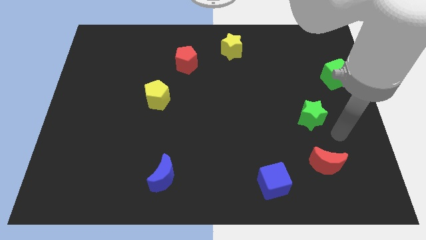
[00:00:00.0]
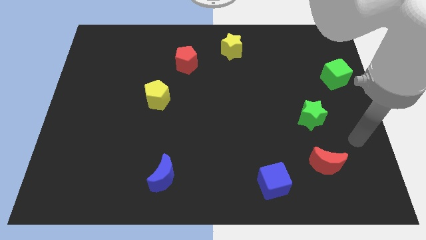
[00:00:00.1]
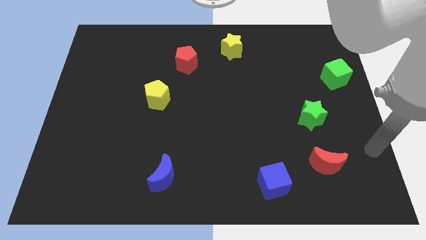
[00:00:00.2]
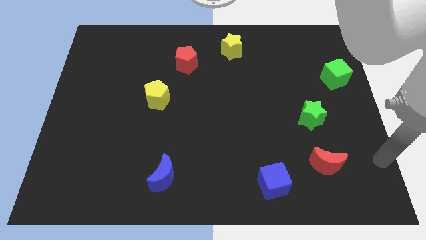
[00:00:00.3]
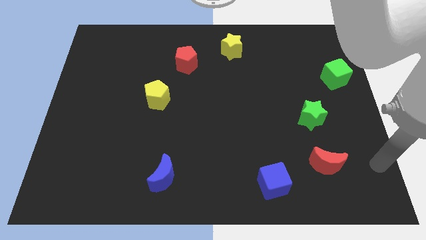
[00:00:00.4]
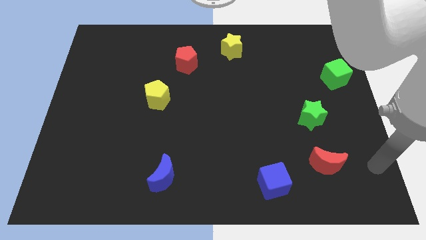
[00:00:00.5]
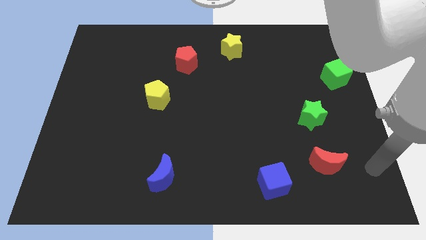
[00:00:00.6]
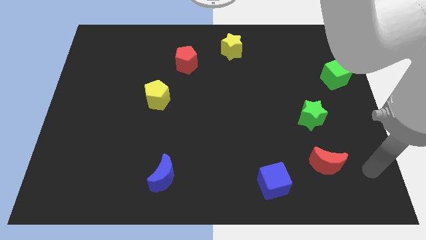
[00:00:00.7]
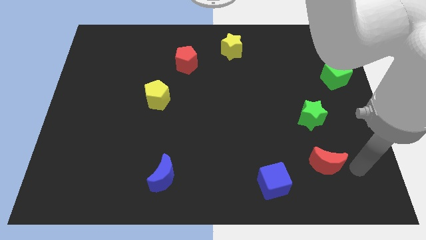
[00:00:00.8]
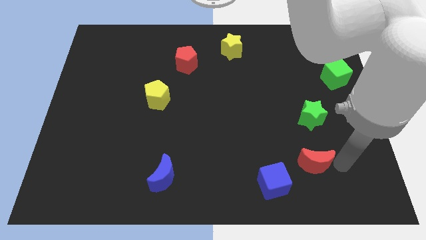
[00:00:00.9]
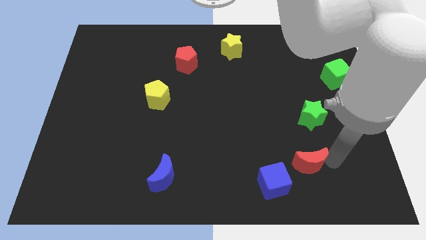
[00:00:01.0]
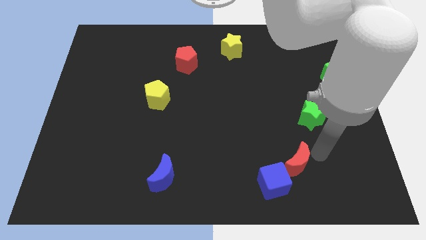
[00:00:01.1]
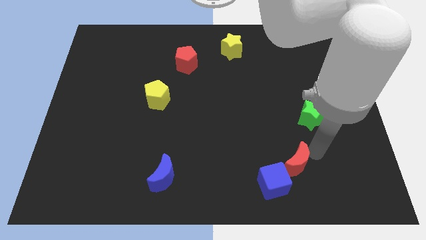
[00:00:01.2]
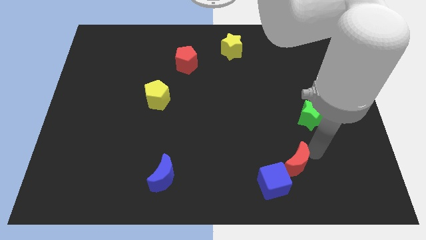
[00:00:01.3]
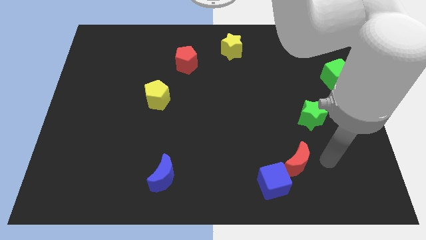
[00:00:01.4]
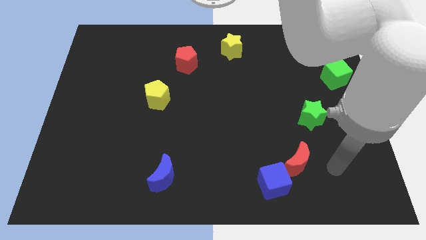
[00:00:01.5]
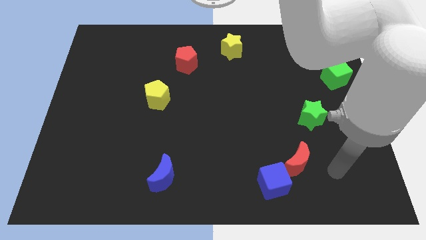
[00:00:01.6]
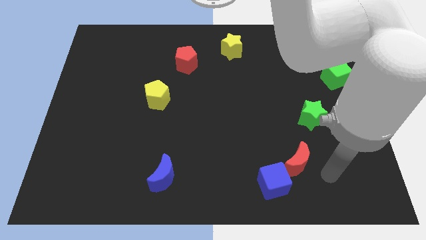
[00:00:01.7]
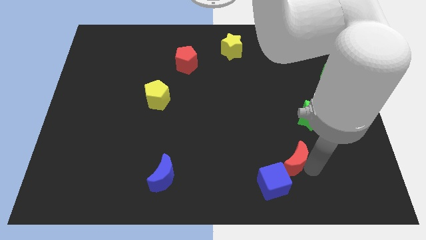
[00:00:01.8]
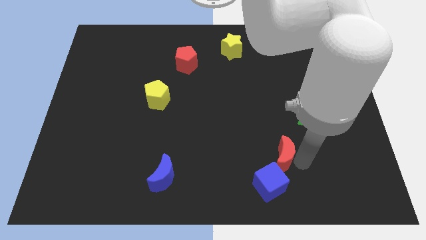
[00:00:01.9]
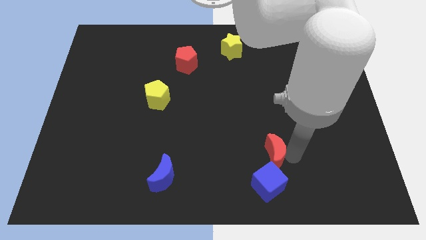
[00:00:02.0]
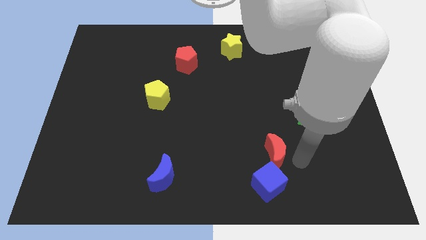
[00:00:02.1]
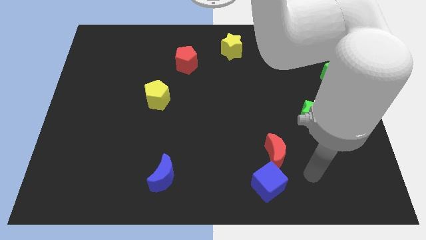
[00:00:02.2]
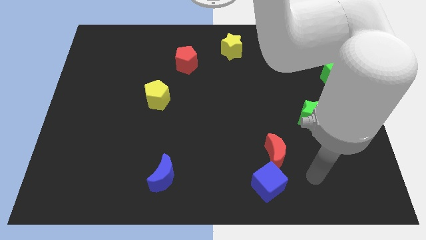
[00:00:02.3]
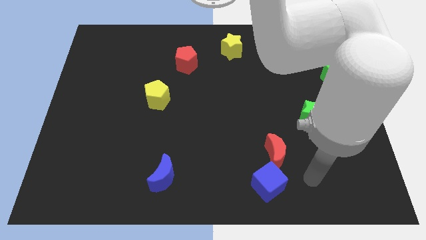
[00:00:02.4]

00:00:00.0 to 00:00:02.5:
push the red crescent above the blue cube

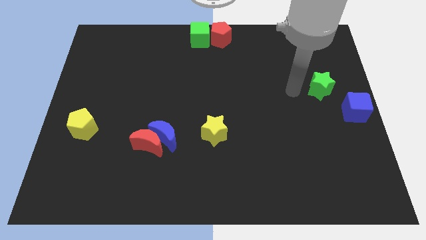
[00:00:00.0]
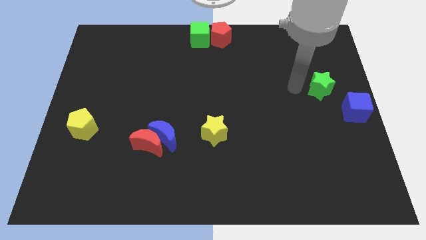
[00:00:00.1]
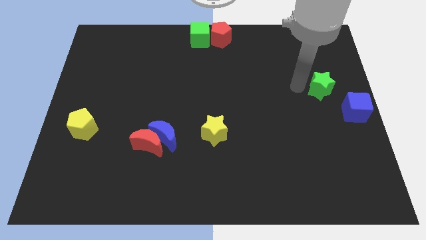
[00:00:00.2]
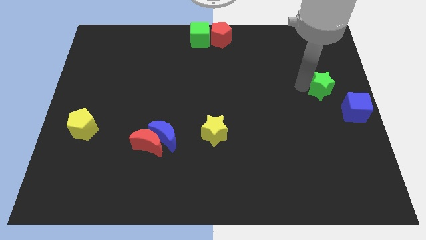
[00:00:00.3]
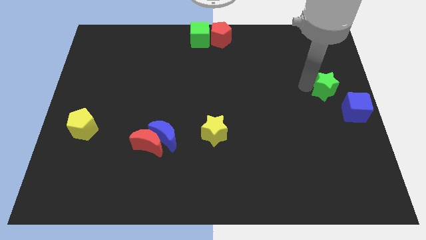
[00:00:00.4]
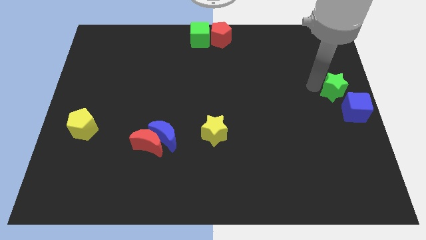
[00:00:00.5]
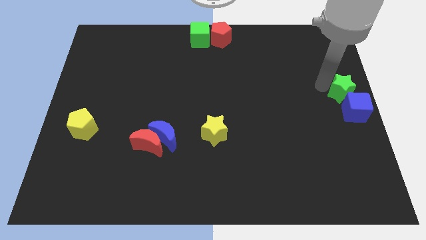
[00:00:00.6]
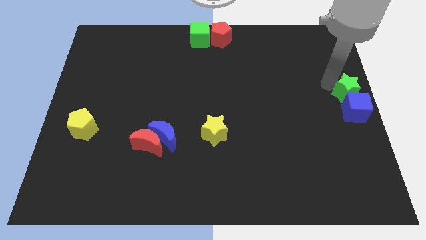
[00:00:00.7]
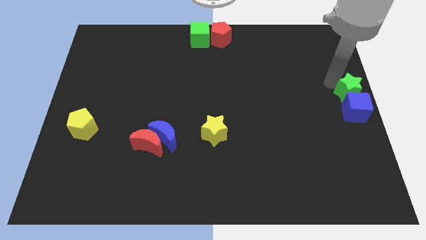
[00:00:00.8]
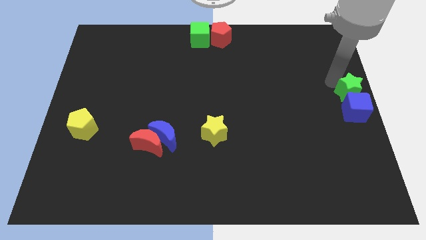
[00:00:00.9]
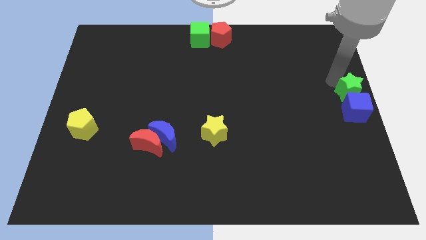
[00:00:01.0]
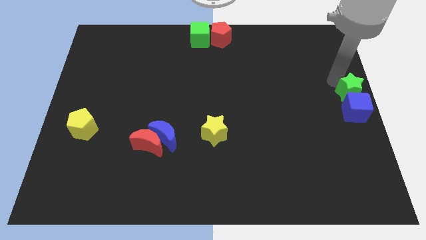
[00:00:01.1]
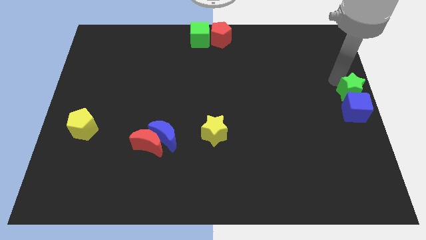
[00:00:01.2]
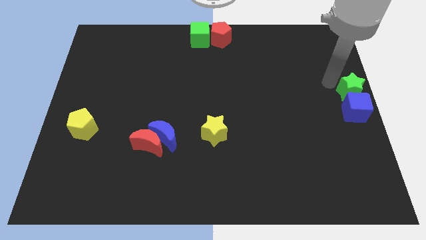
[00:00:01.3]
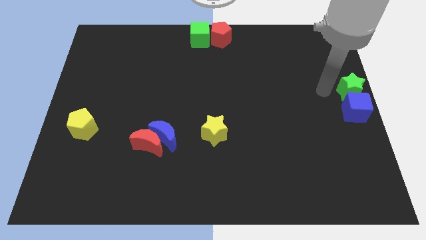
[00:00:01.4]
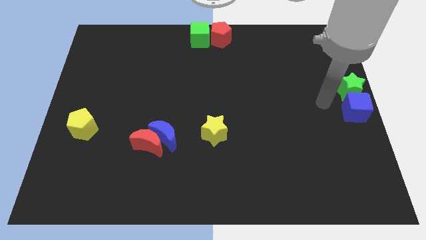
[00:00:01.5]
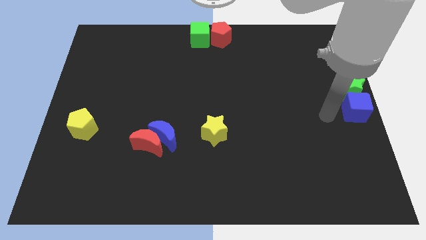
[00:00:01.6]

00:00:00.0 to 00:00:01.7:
put the green star on the top side of the blue cube

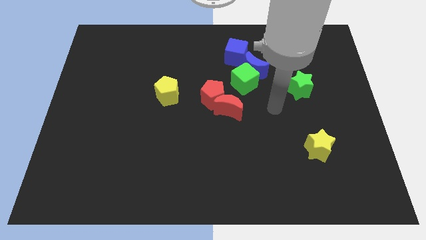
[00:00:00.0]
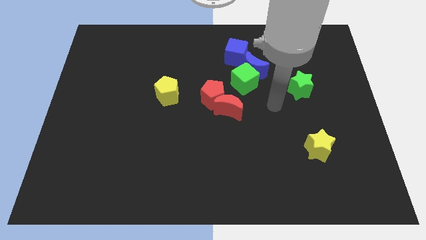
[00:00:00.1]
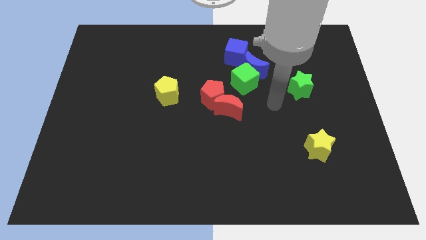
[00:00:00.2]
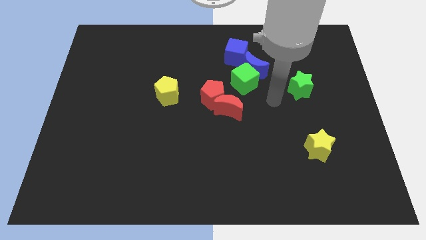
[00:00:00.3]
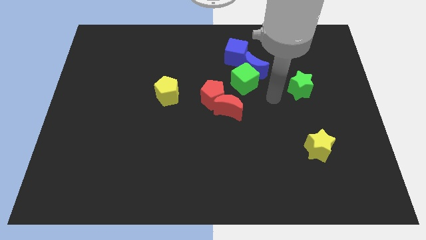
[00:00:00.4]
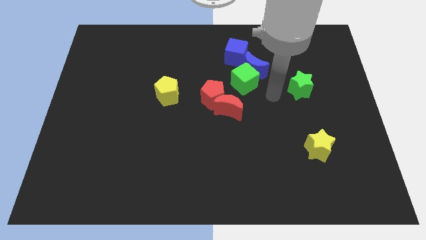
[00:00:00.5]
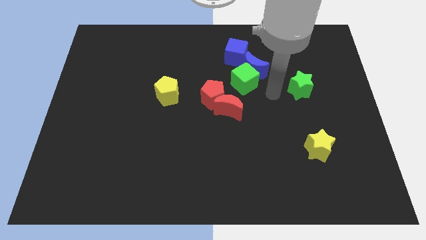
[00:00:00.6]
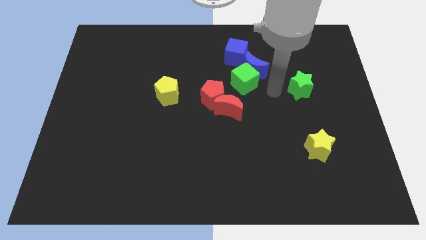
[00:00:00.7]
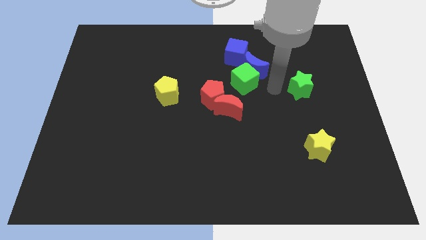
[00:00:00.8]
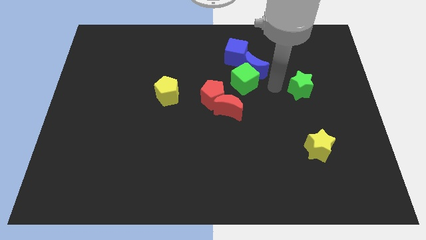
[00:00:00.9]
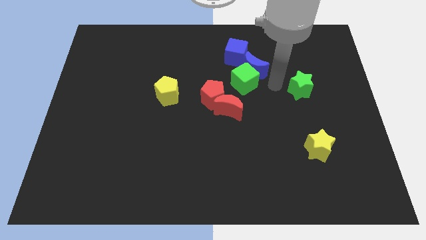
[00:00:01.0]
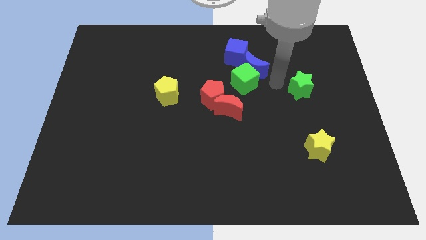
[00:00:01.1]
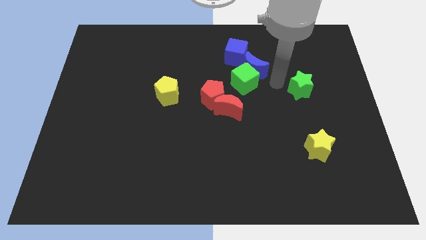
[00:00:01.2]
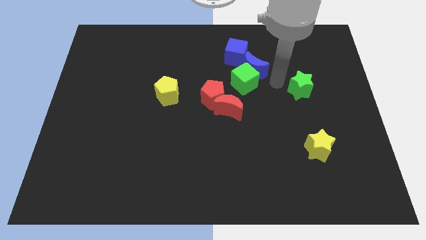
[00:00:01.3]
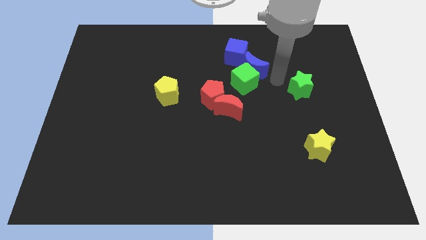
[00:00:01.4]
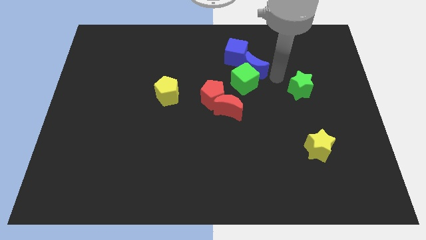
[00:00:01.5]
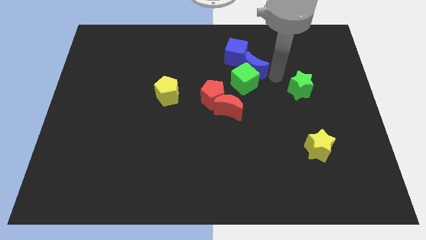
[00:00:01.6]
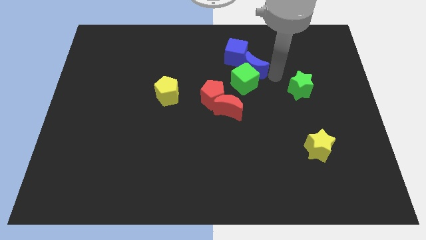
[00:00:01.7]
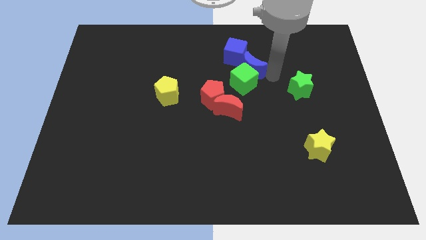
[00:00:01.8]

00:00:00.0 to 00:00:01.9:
move the arm at the right side of the blue crescent

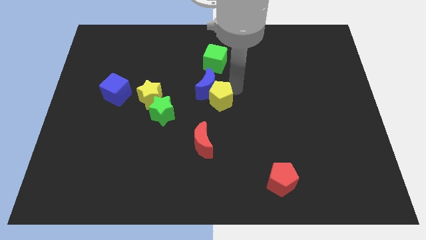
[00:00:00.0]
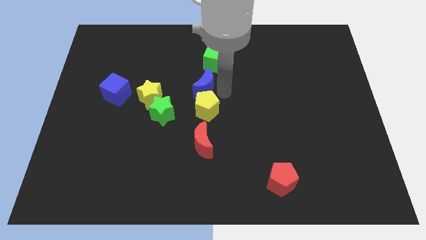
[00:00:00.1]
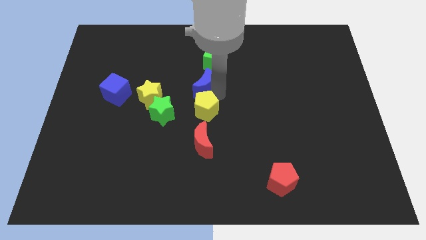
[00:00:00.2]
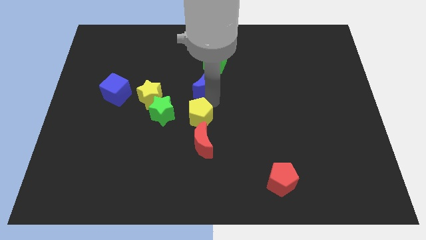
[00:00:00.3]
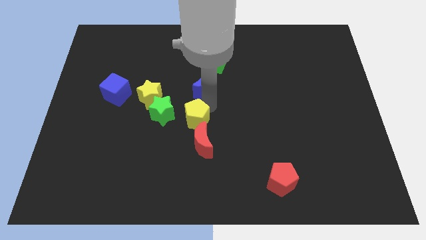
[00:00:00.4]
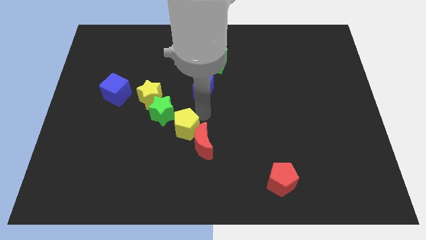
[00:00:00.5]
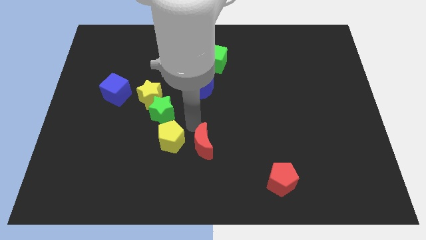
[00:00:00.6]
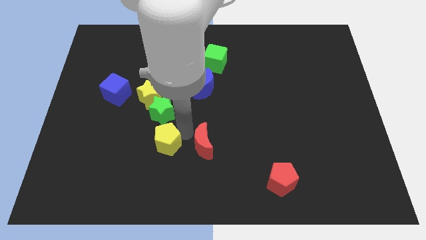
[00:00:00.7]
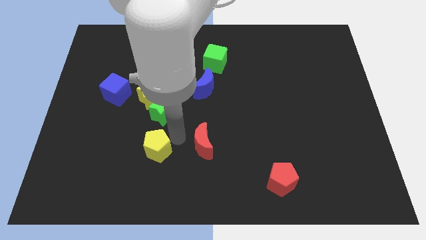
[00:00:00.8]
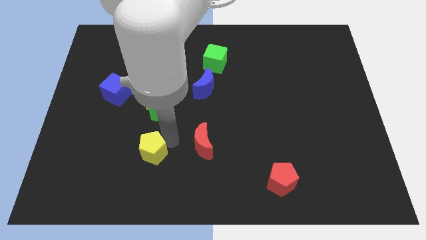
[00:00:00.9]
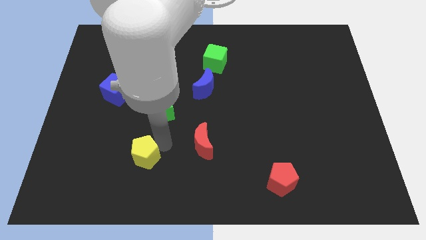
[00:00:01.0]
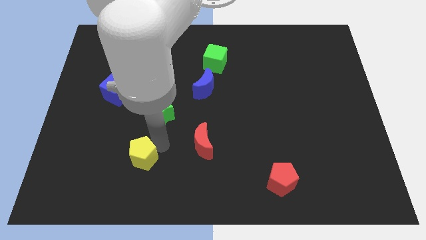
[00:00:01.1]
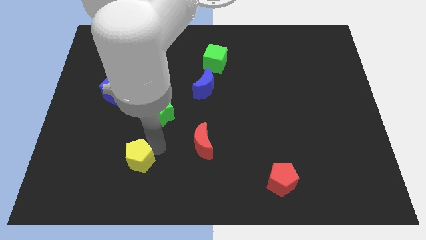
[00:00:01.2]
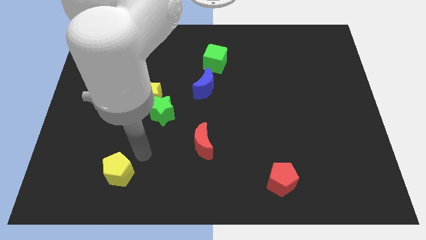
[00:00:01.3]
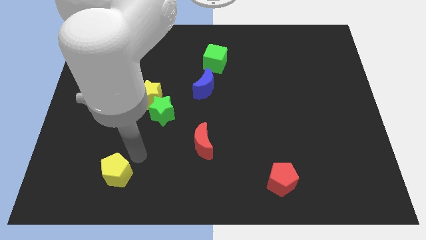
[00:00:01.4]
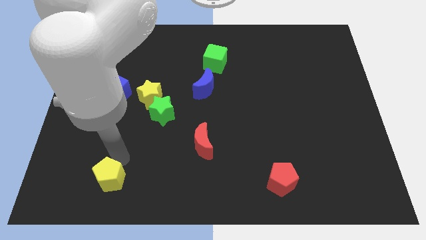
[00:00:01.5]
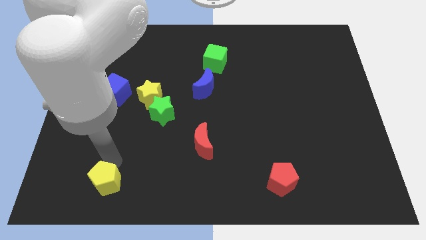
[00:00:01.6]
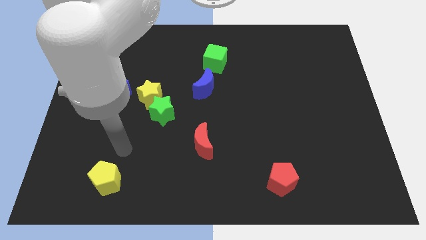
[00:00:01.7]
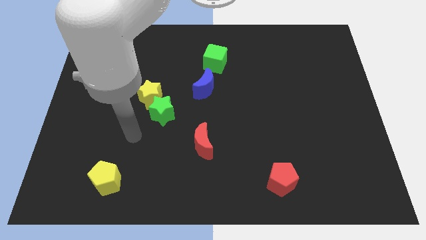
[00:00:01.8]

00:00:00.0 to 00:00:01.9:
move the yellow pentagon towards the bottom left

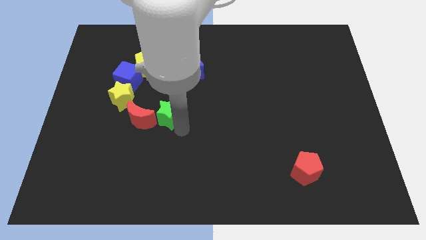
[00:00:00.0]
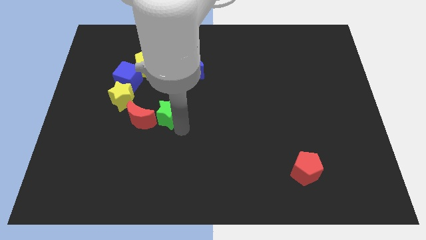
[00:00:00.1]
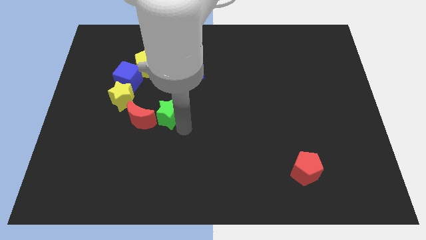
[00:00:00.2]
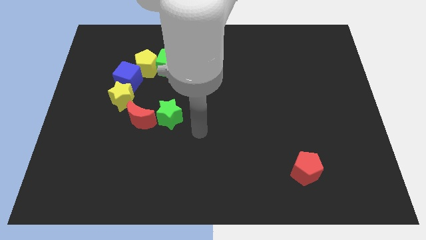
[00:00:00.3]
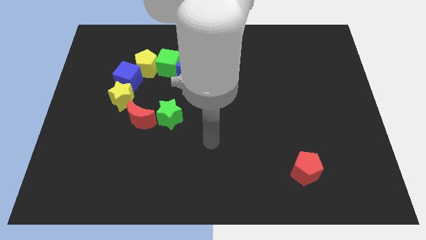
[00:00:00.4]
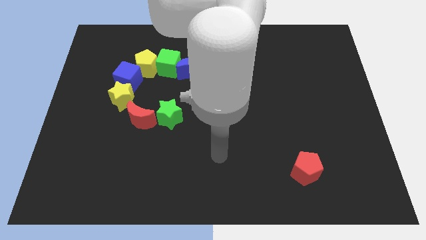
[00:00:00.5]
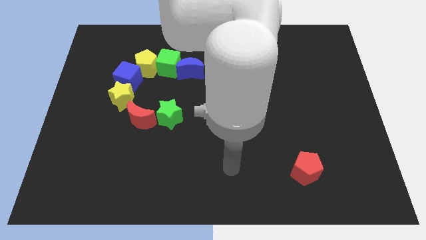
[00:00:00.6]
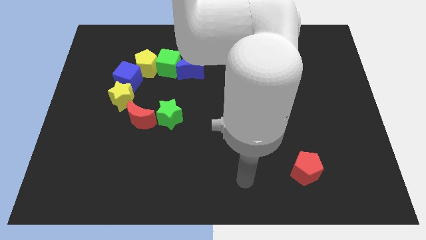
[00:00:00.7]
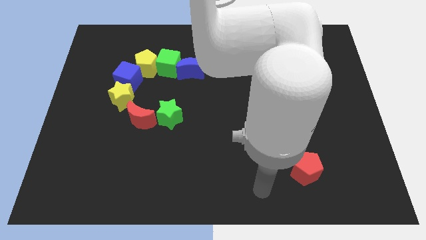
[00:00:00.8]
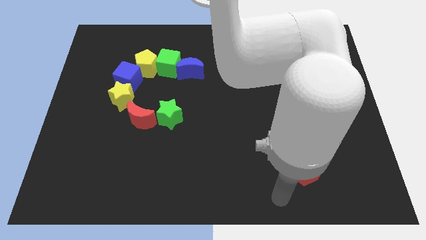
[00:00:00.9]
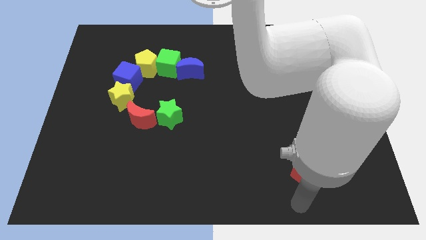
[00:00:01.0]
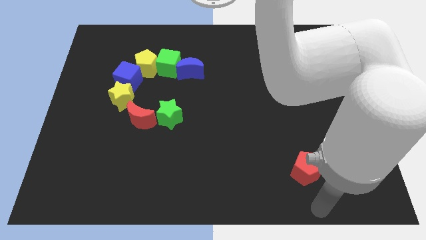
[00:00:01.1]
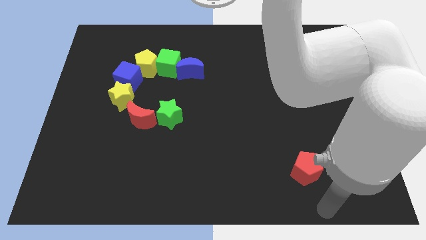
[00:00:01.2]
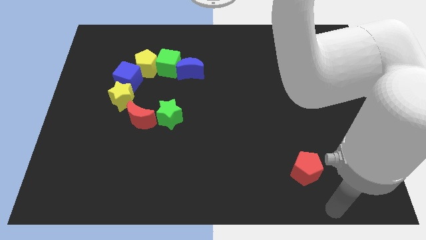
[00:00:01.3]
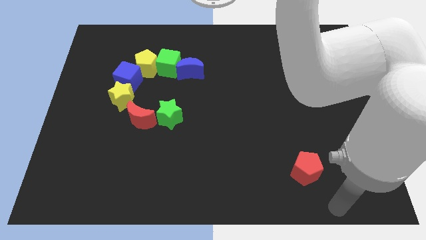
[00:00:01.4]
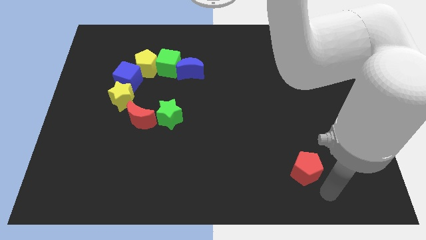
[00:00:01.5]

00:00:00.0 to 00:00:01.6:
place the green star to the right side of the red moon
